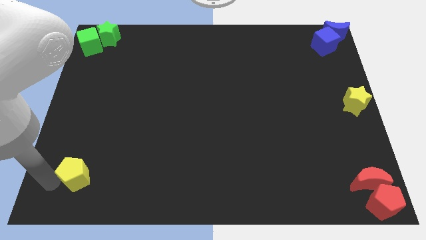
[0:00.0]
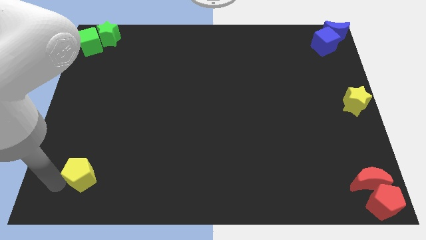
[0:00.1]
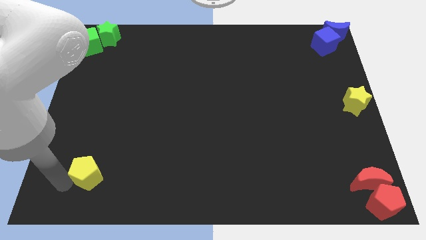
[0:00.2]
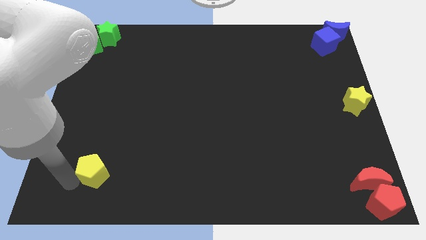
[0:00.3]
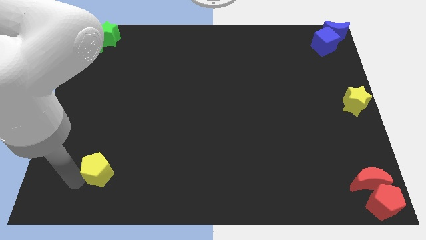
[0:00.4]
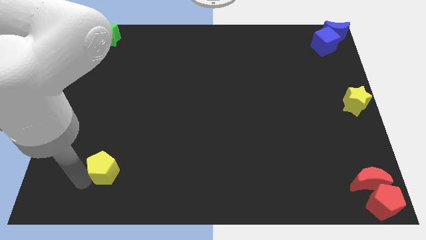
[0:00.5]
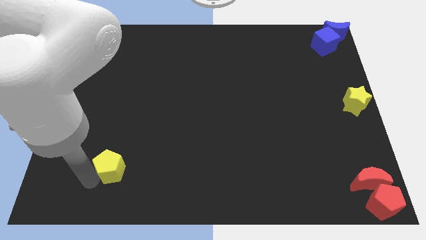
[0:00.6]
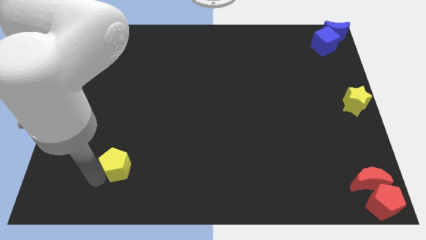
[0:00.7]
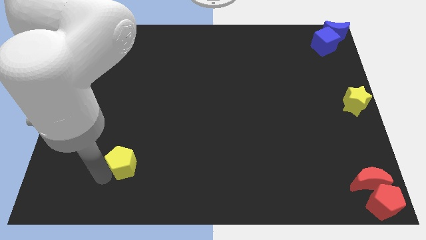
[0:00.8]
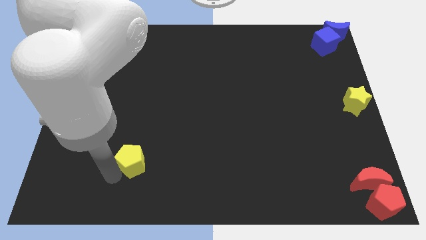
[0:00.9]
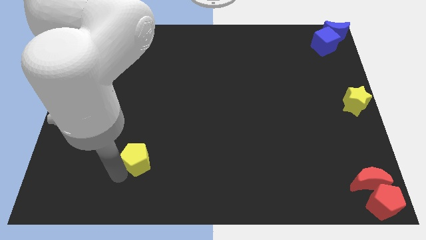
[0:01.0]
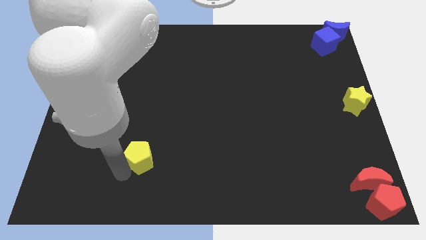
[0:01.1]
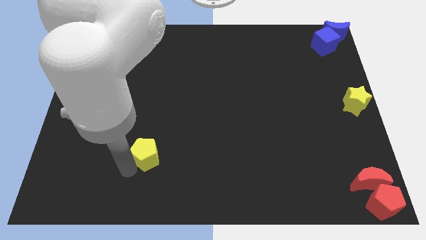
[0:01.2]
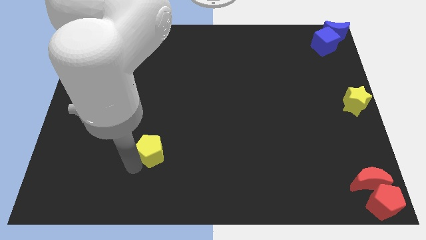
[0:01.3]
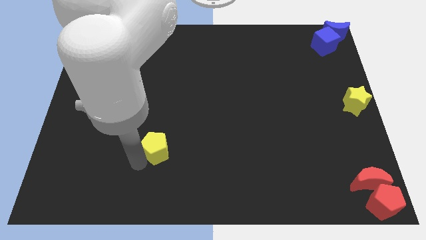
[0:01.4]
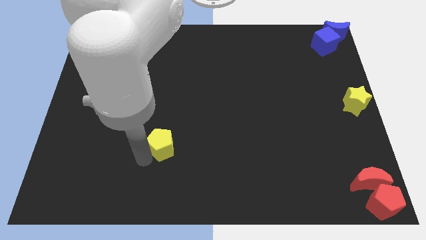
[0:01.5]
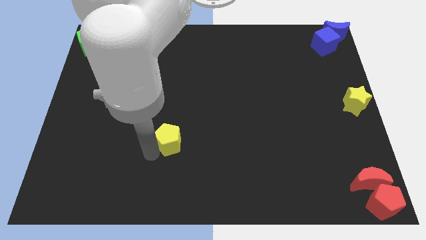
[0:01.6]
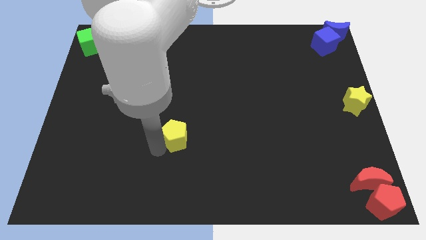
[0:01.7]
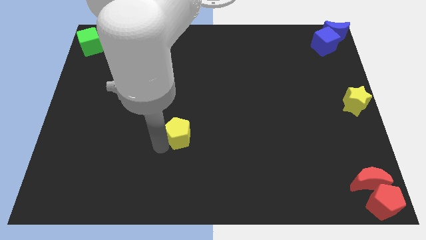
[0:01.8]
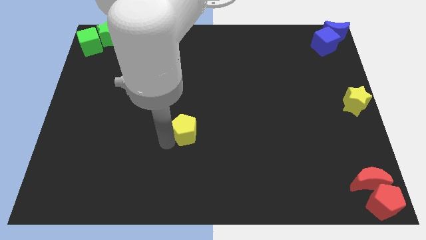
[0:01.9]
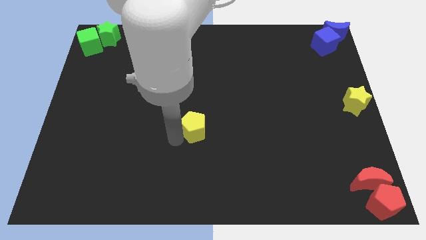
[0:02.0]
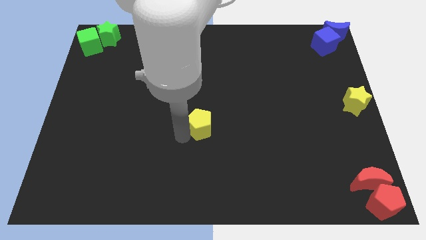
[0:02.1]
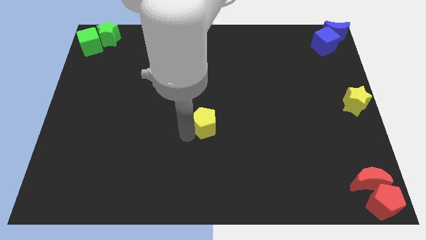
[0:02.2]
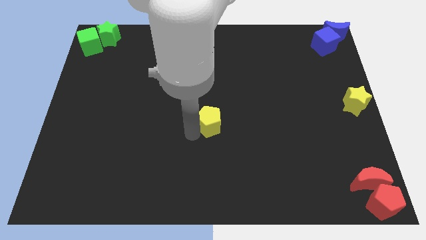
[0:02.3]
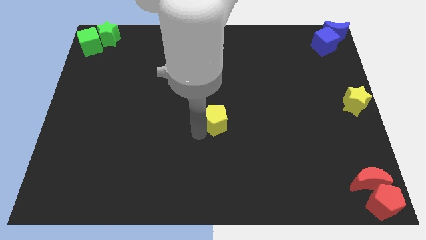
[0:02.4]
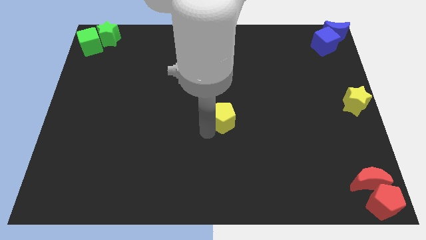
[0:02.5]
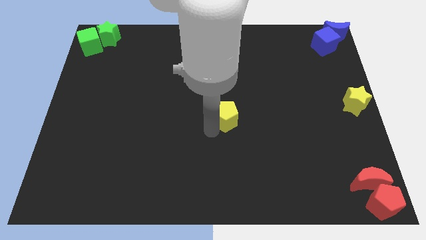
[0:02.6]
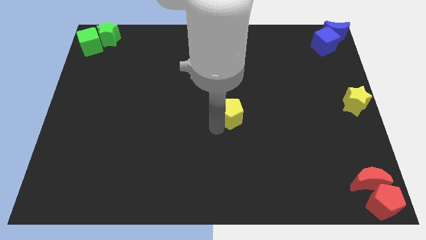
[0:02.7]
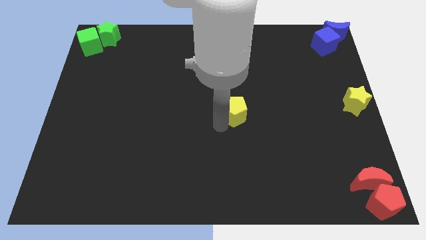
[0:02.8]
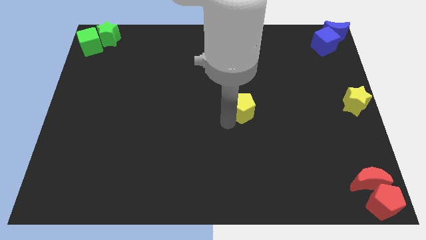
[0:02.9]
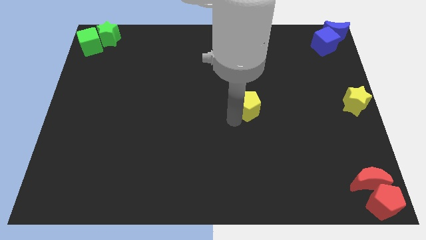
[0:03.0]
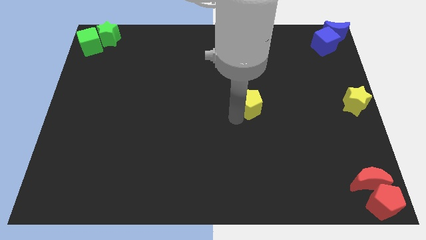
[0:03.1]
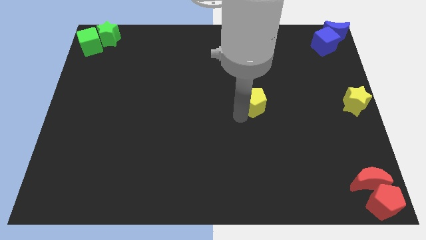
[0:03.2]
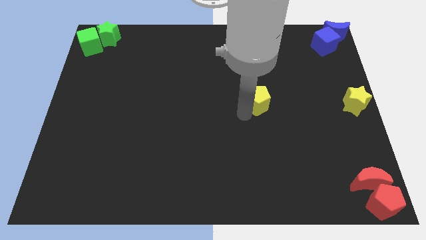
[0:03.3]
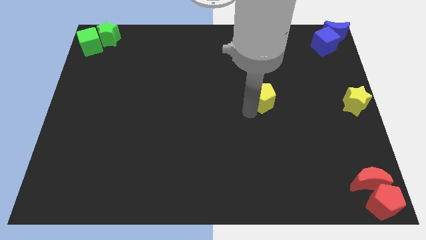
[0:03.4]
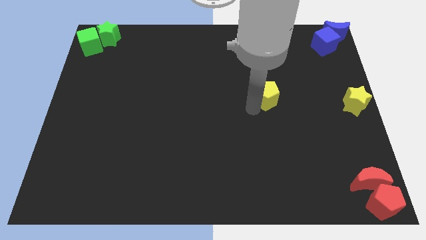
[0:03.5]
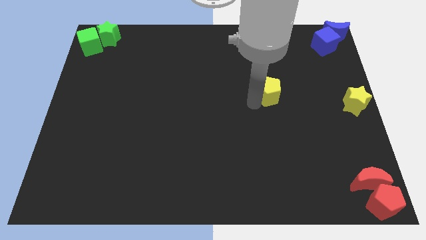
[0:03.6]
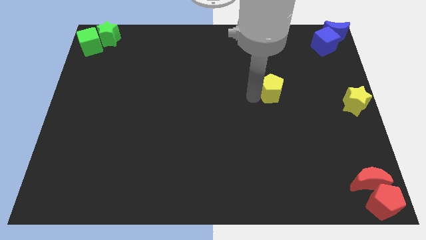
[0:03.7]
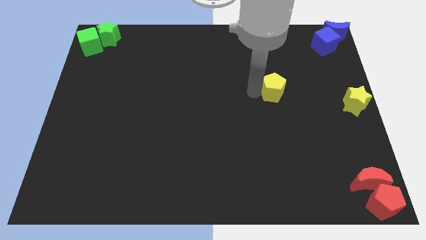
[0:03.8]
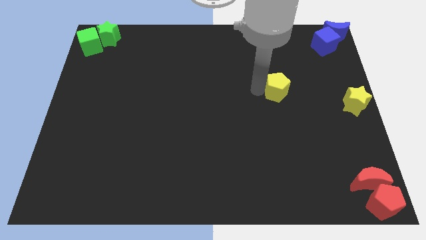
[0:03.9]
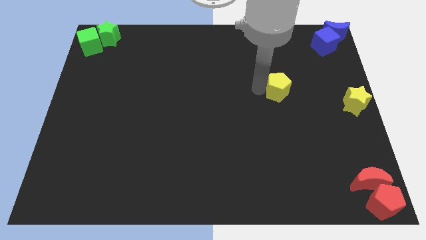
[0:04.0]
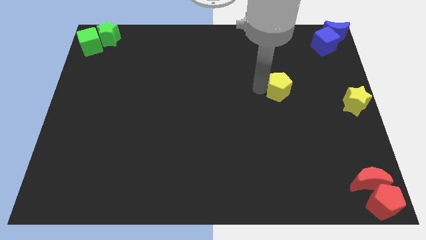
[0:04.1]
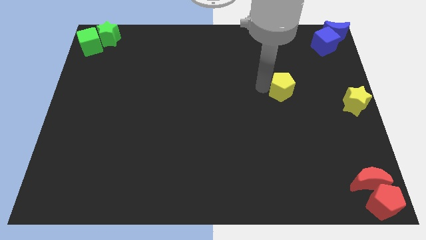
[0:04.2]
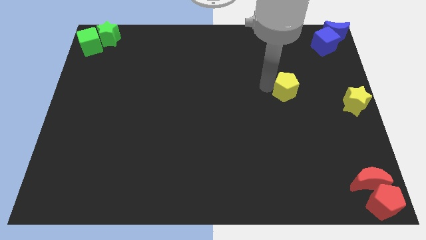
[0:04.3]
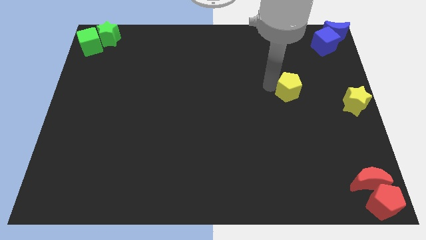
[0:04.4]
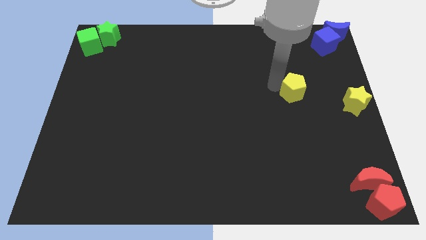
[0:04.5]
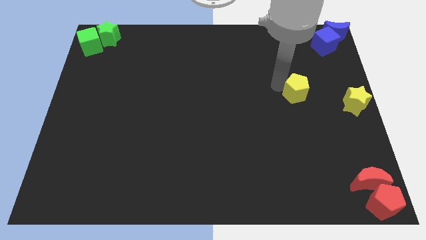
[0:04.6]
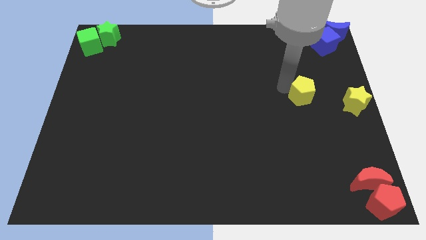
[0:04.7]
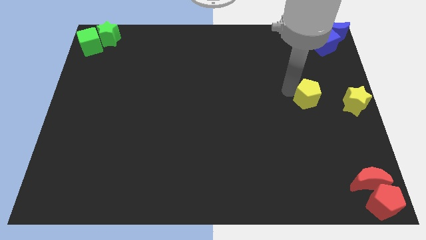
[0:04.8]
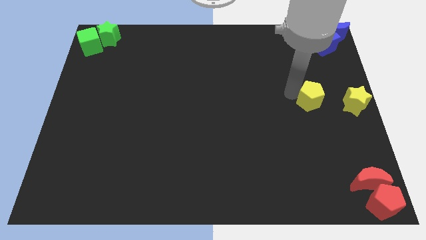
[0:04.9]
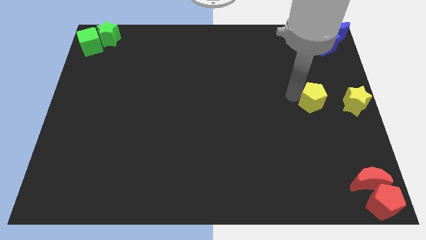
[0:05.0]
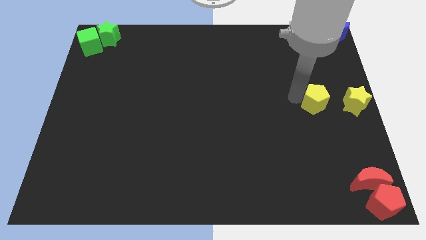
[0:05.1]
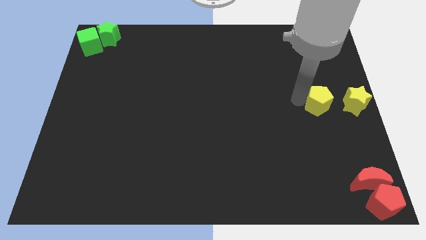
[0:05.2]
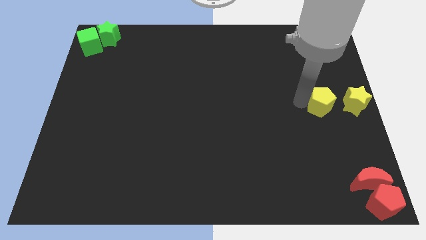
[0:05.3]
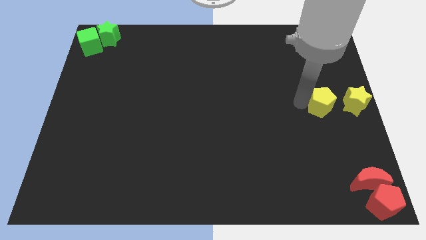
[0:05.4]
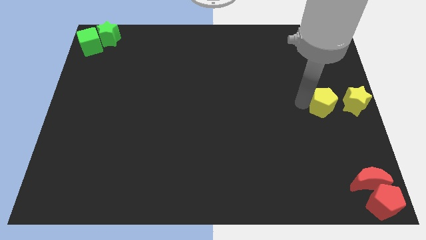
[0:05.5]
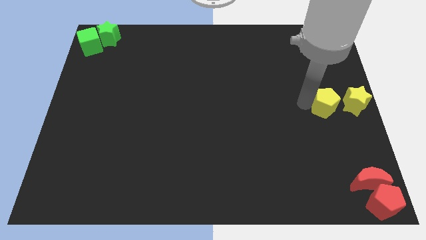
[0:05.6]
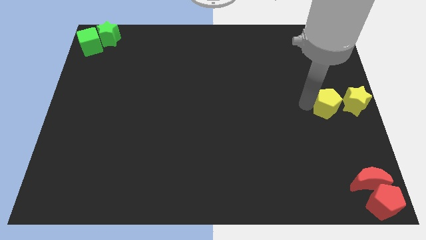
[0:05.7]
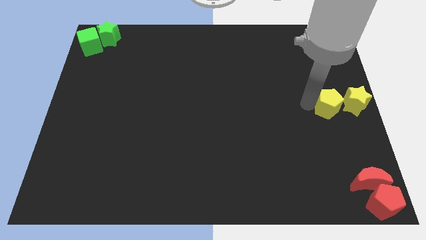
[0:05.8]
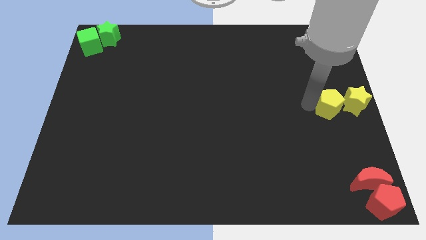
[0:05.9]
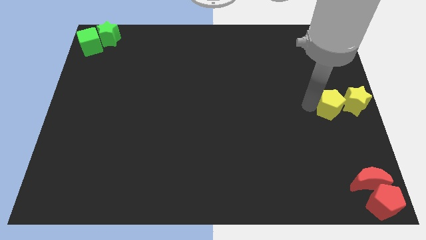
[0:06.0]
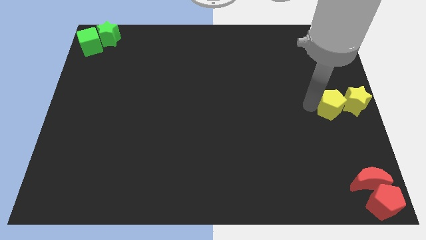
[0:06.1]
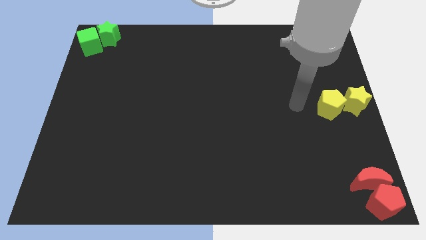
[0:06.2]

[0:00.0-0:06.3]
slide the yellow pentagon towards the yellow star

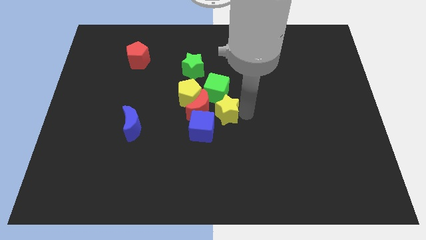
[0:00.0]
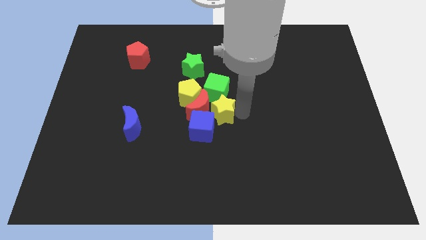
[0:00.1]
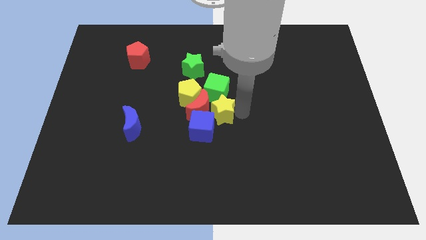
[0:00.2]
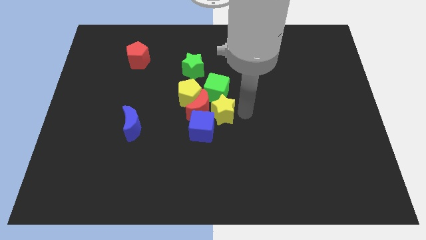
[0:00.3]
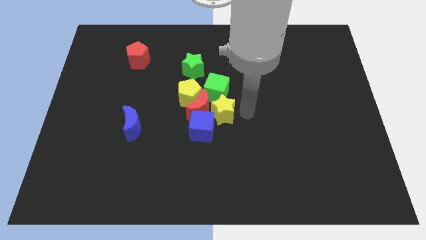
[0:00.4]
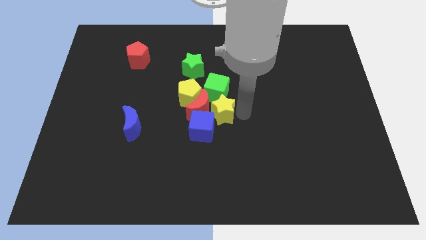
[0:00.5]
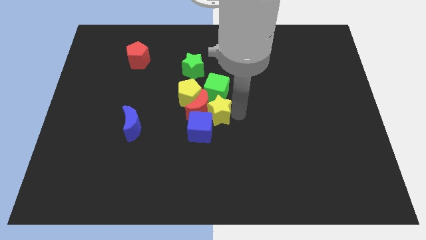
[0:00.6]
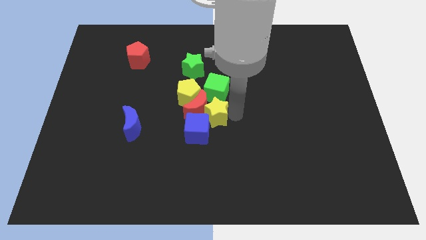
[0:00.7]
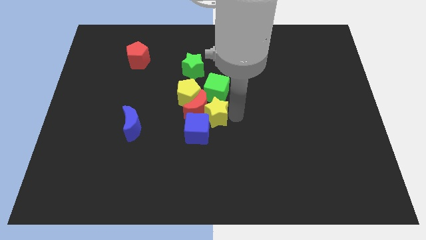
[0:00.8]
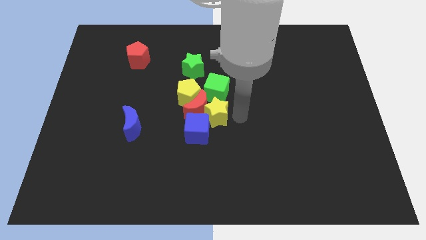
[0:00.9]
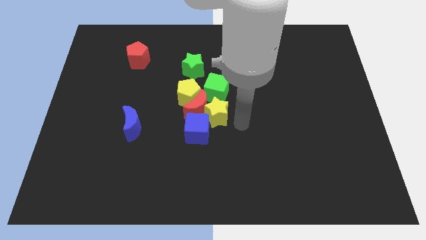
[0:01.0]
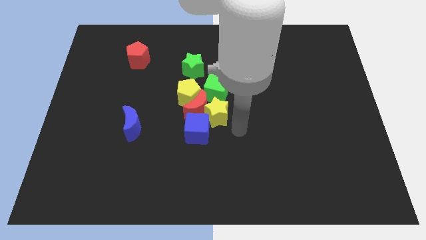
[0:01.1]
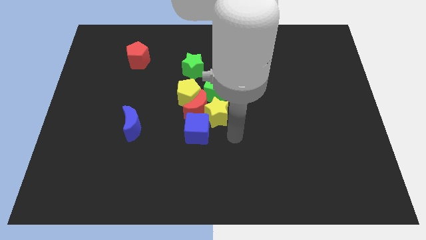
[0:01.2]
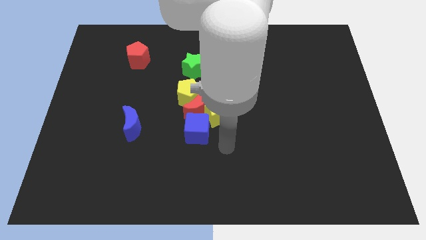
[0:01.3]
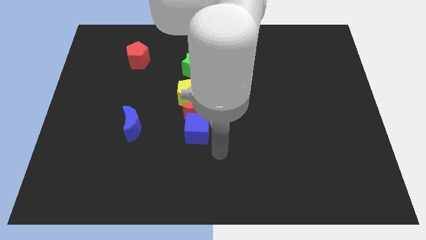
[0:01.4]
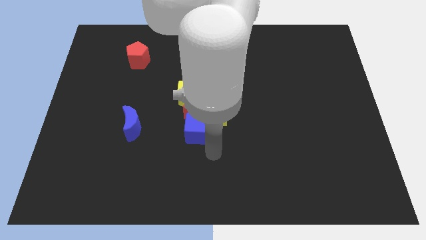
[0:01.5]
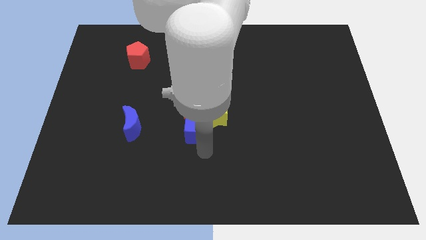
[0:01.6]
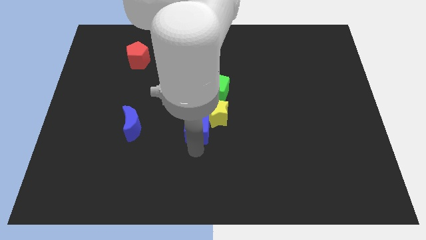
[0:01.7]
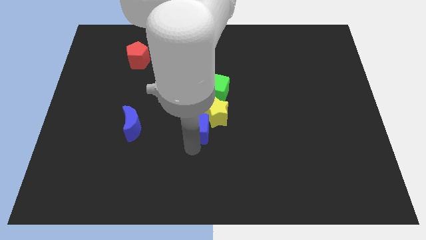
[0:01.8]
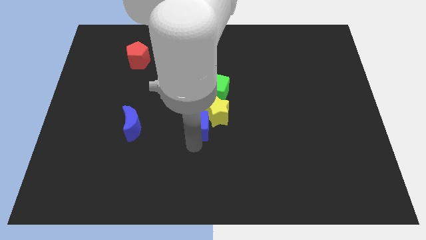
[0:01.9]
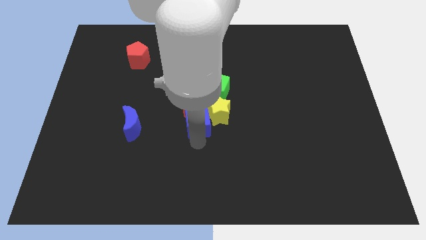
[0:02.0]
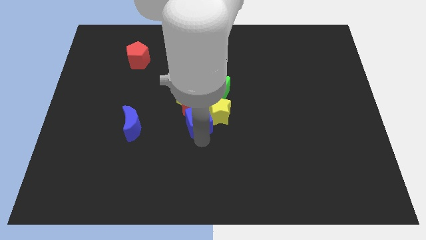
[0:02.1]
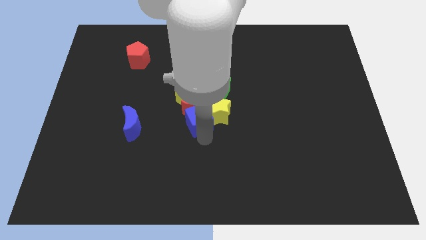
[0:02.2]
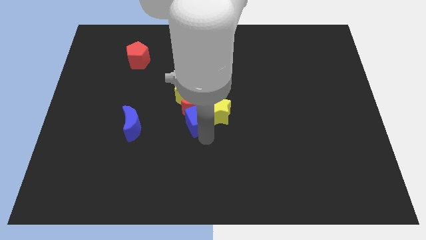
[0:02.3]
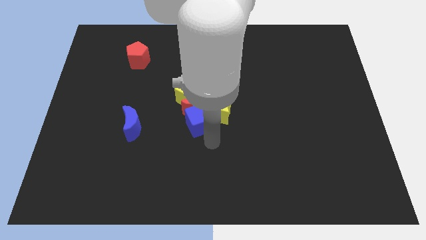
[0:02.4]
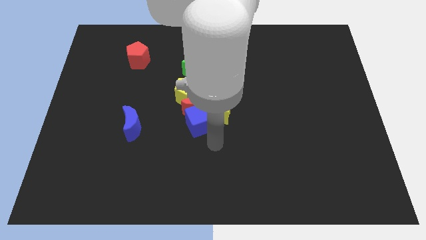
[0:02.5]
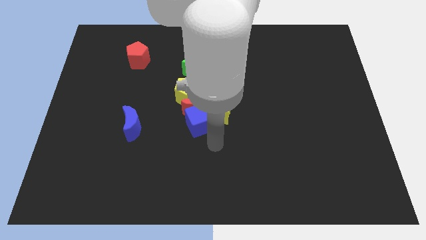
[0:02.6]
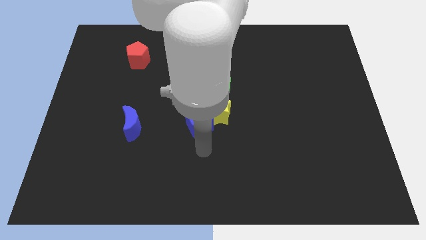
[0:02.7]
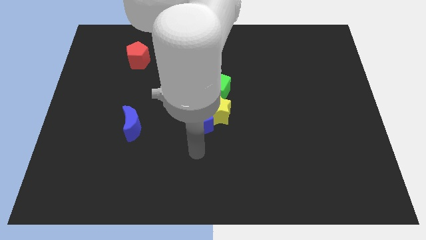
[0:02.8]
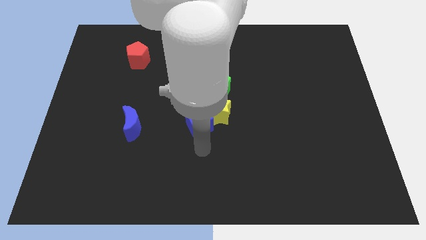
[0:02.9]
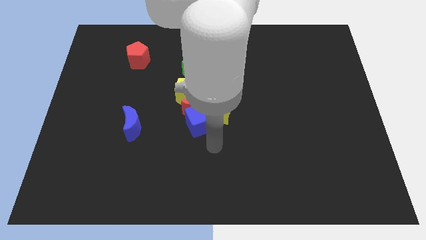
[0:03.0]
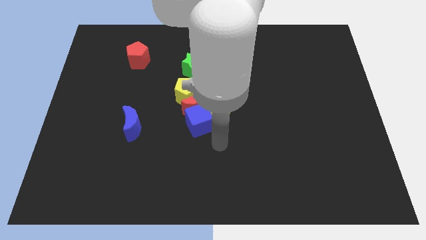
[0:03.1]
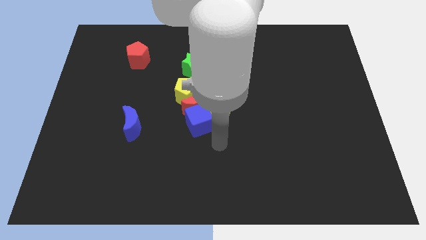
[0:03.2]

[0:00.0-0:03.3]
put the yellow star into the red moon
